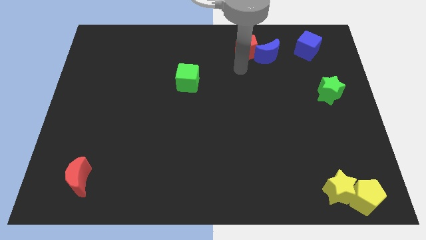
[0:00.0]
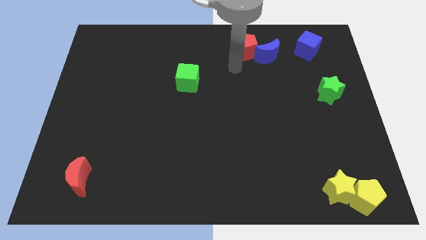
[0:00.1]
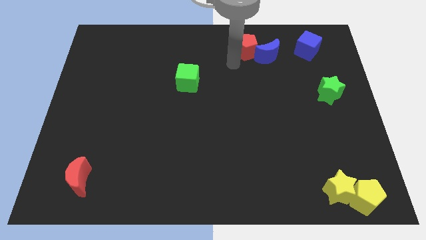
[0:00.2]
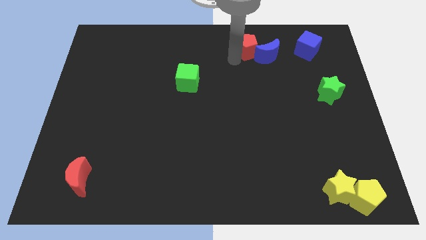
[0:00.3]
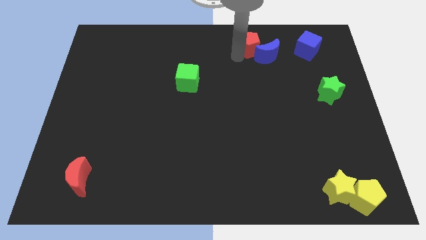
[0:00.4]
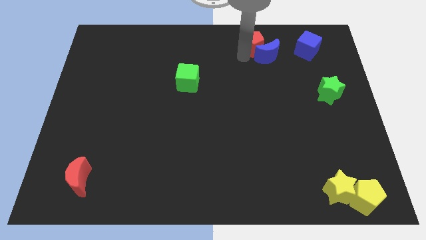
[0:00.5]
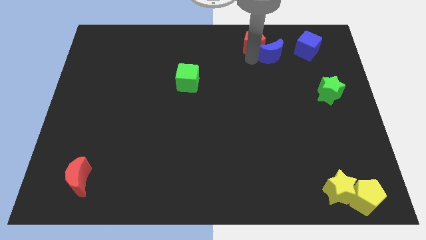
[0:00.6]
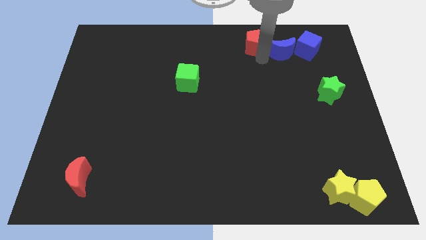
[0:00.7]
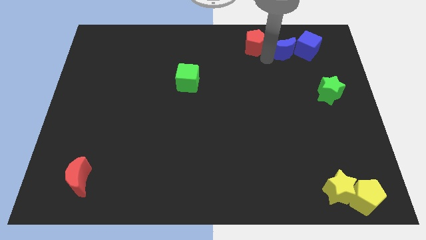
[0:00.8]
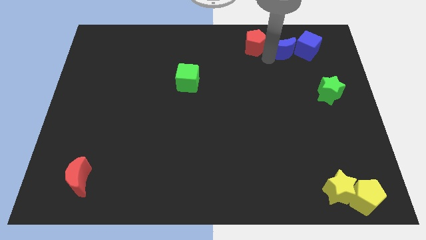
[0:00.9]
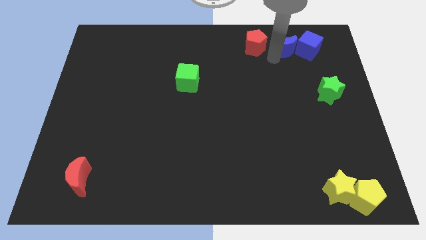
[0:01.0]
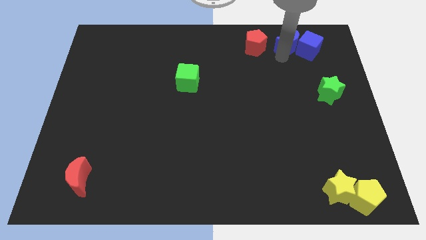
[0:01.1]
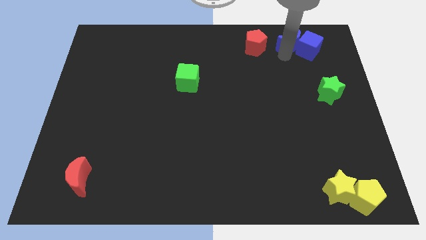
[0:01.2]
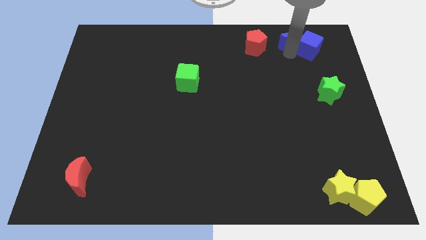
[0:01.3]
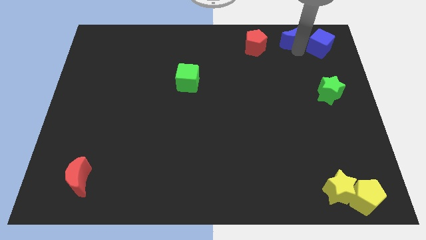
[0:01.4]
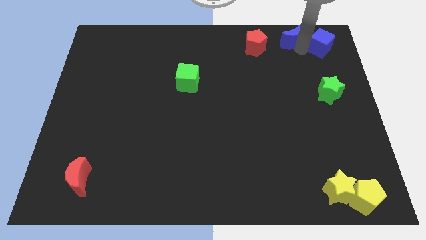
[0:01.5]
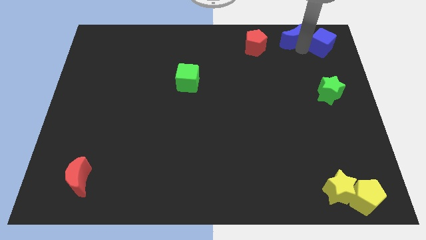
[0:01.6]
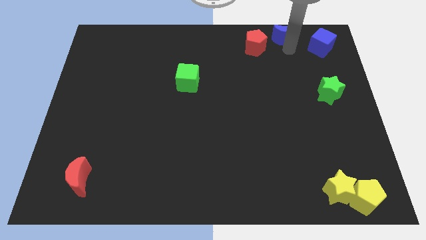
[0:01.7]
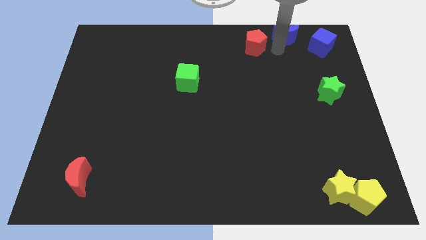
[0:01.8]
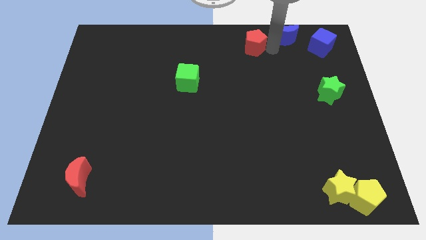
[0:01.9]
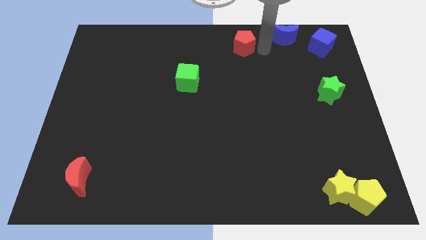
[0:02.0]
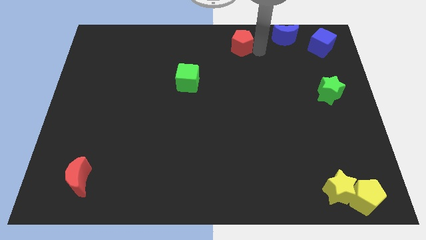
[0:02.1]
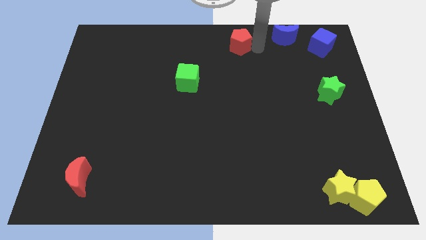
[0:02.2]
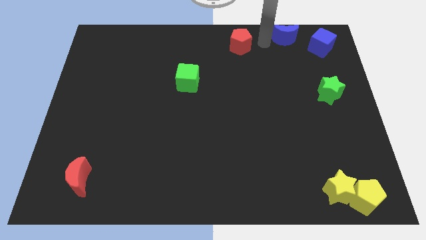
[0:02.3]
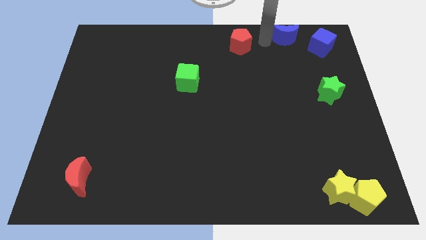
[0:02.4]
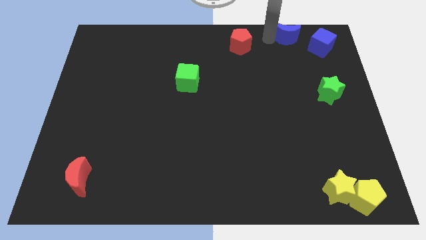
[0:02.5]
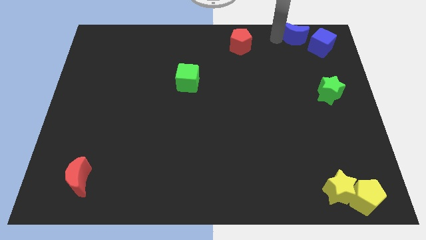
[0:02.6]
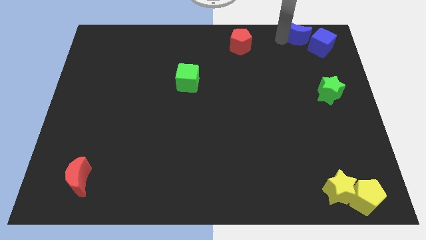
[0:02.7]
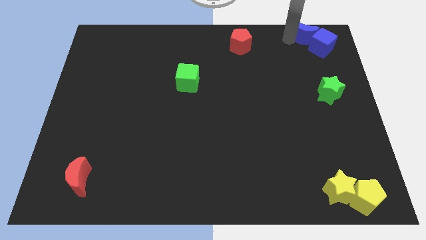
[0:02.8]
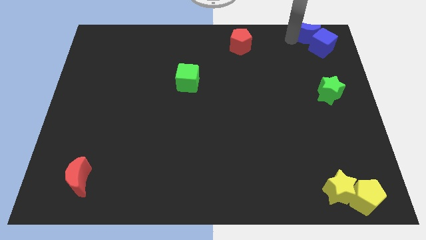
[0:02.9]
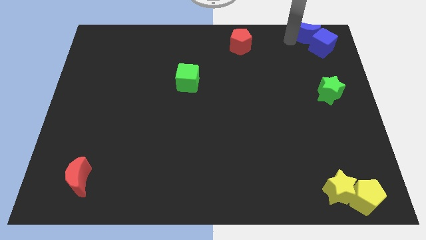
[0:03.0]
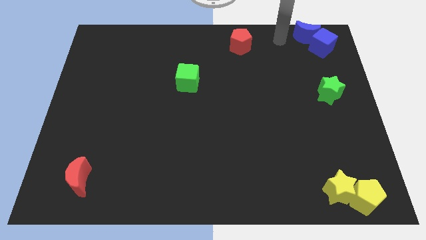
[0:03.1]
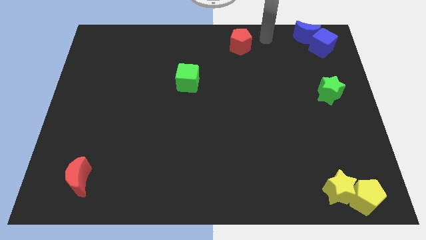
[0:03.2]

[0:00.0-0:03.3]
separate the blue moon from the red pentagon

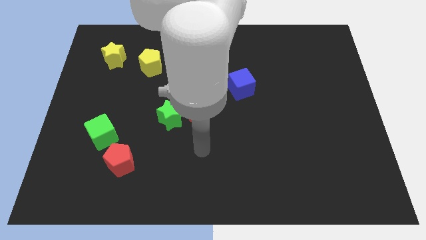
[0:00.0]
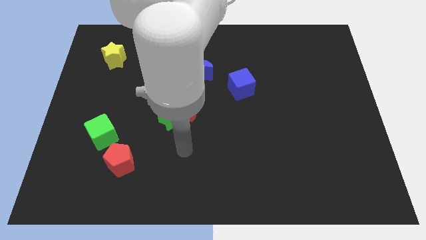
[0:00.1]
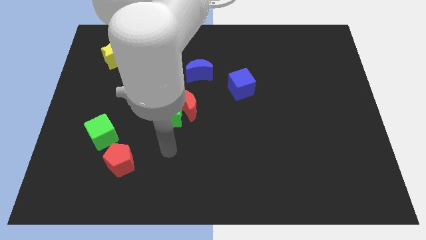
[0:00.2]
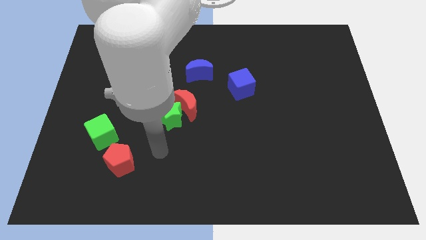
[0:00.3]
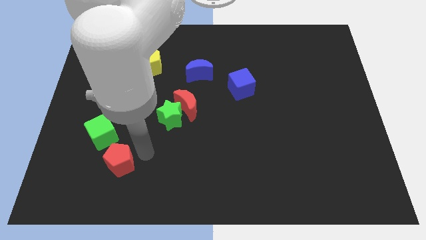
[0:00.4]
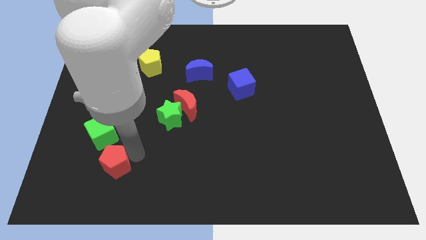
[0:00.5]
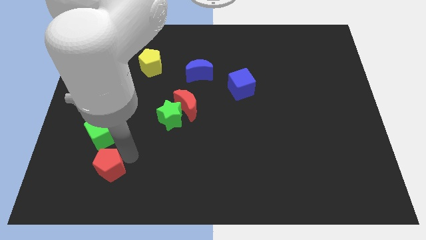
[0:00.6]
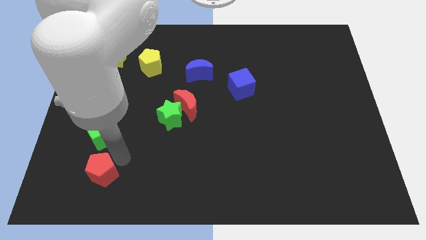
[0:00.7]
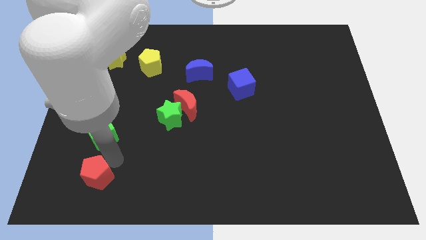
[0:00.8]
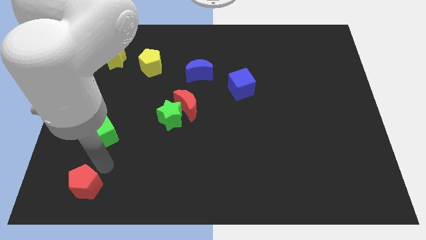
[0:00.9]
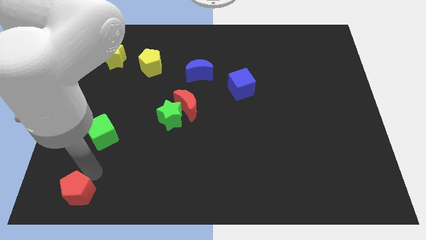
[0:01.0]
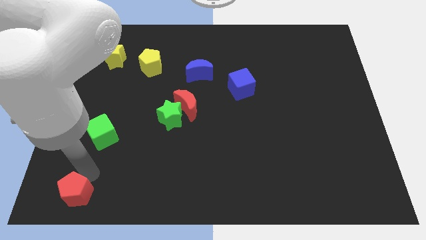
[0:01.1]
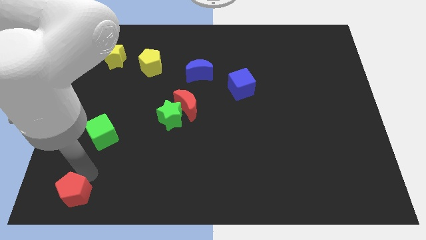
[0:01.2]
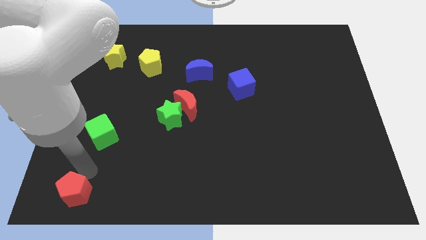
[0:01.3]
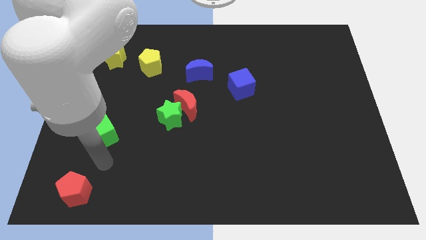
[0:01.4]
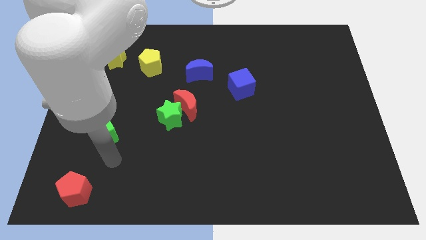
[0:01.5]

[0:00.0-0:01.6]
move the red pentagon to the bottom left of the board

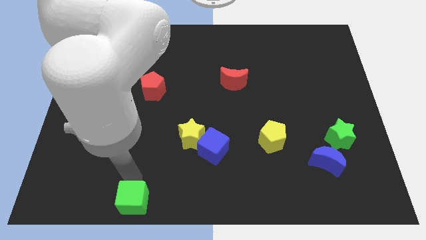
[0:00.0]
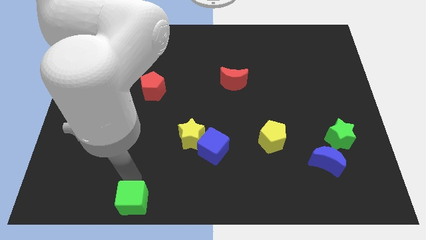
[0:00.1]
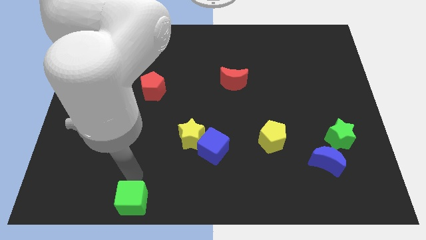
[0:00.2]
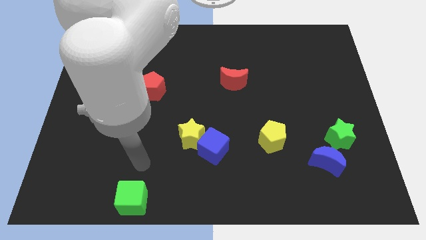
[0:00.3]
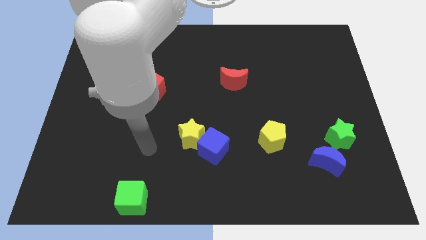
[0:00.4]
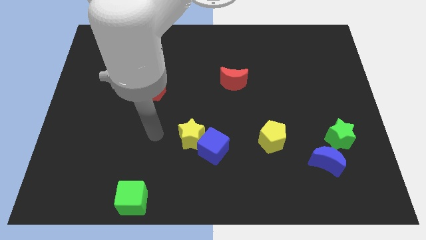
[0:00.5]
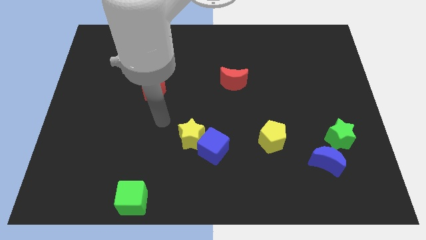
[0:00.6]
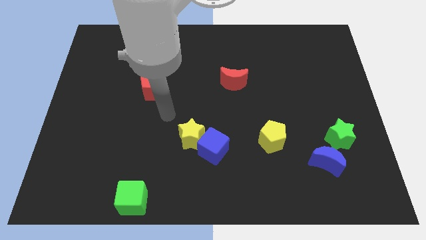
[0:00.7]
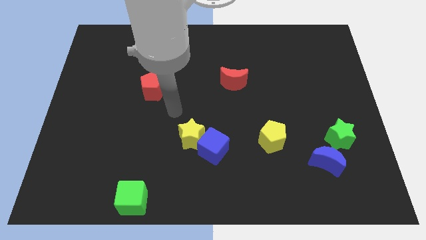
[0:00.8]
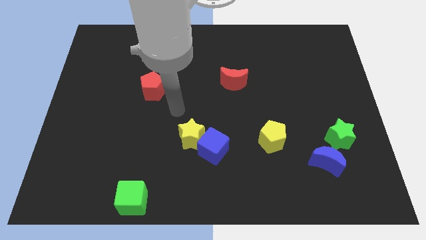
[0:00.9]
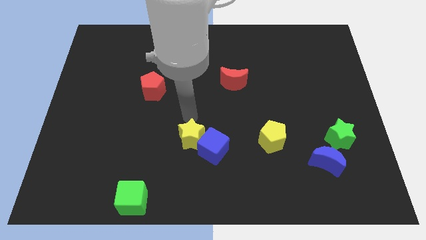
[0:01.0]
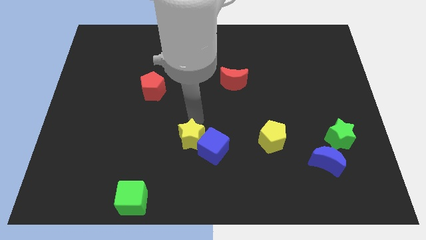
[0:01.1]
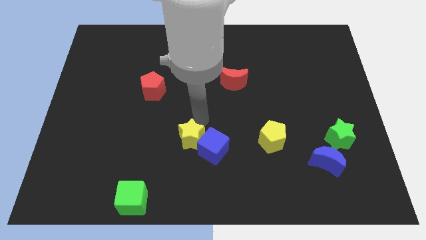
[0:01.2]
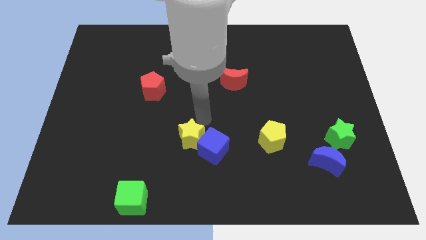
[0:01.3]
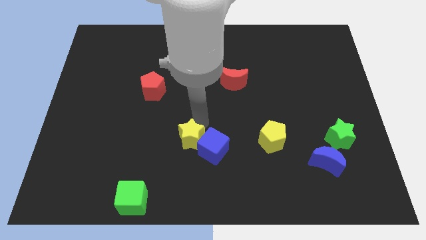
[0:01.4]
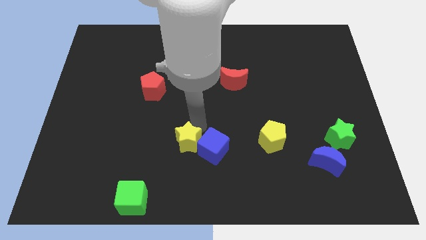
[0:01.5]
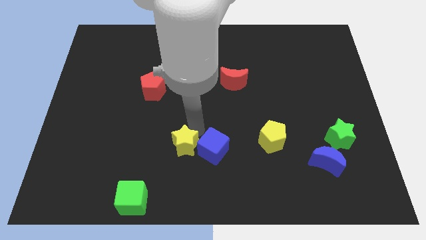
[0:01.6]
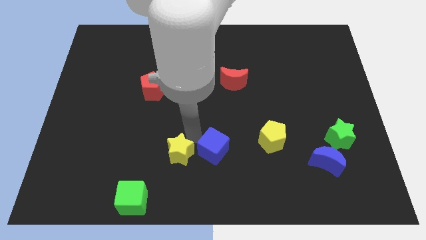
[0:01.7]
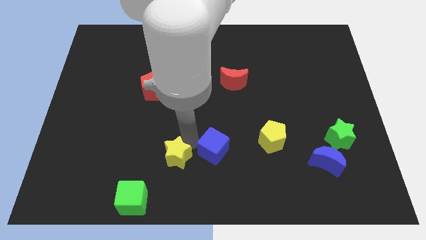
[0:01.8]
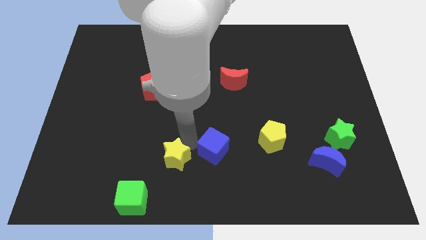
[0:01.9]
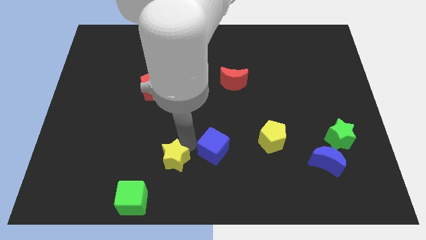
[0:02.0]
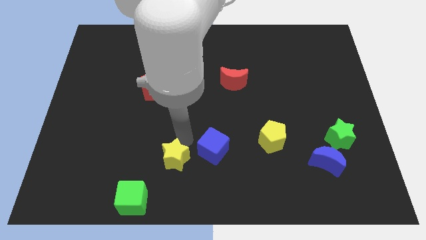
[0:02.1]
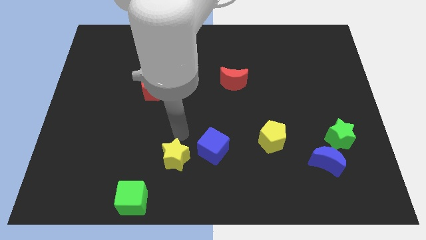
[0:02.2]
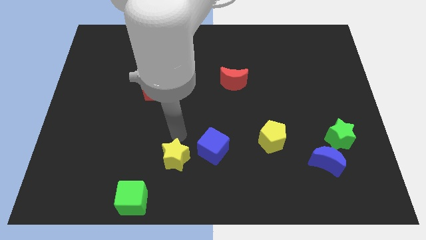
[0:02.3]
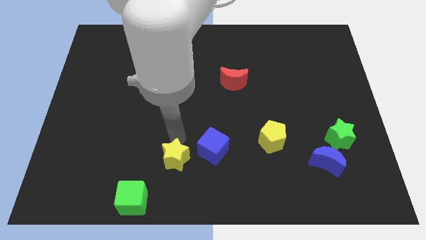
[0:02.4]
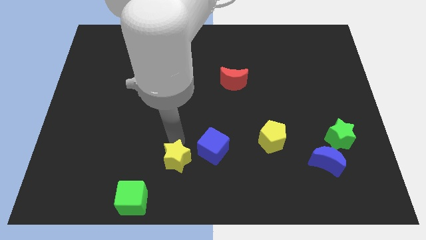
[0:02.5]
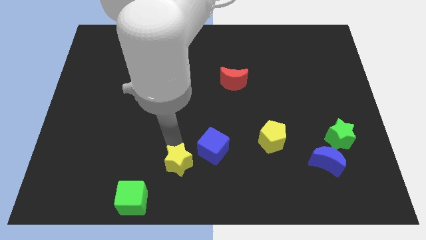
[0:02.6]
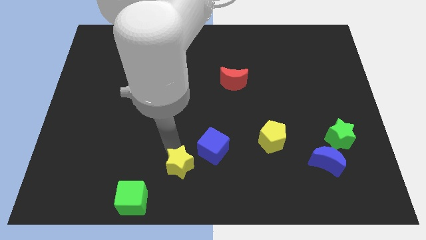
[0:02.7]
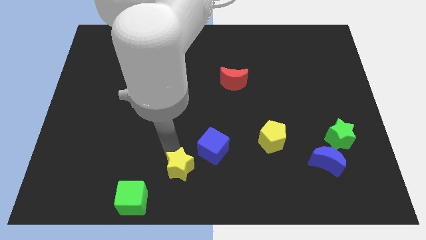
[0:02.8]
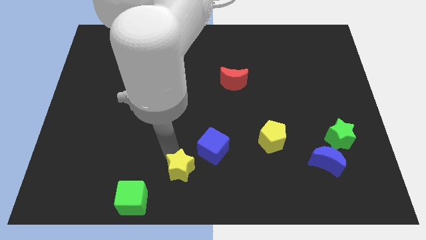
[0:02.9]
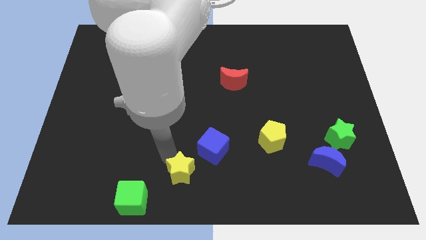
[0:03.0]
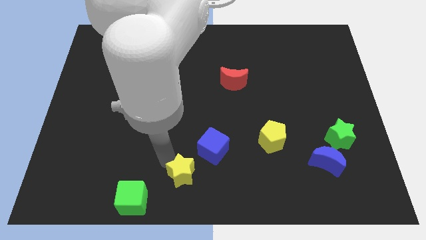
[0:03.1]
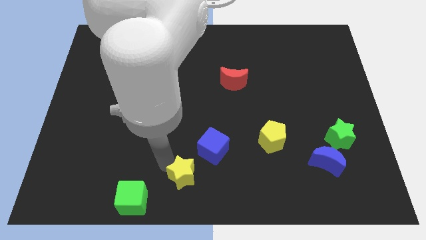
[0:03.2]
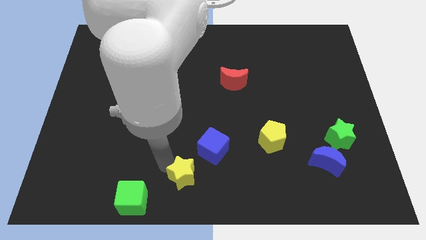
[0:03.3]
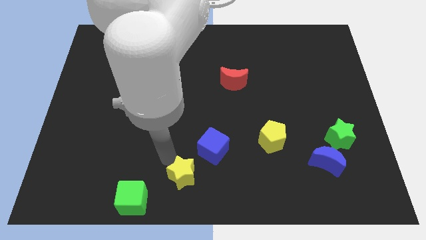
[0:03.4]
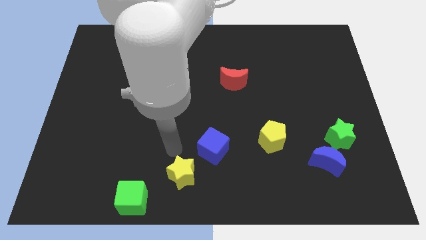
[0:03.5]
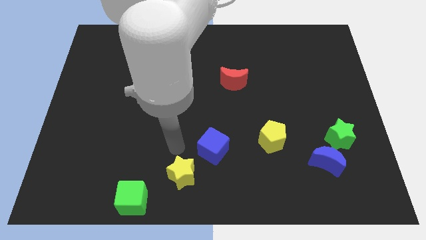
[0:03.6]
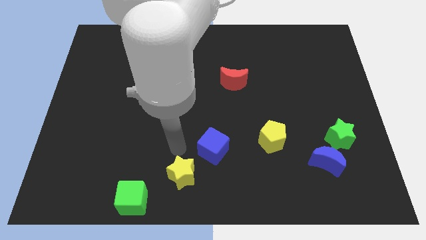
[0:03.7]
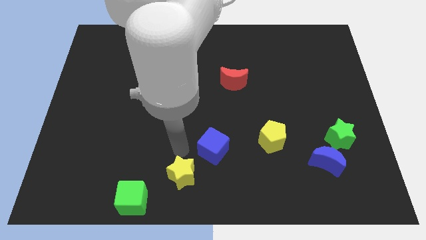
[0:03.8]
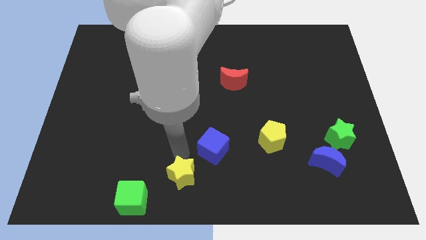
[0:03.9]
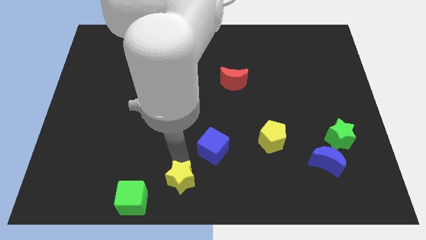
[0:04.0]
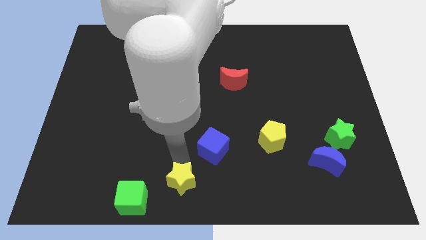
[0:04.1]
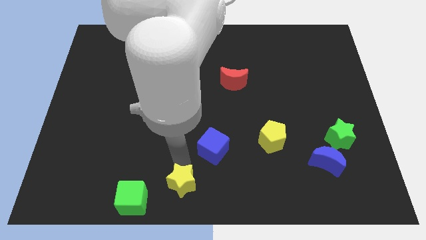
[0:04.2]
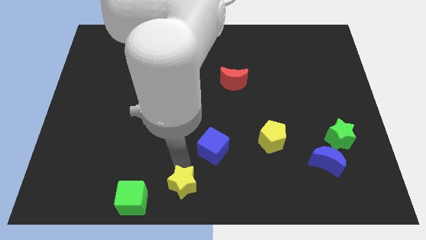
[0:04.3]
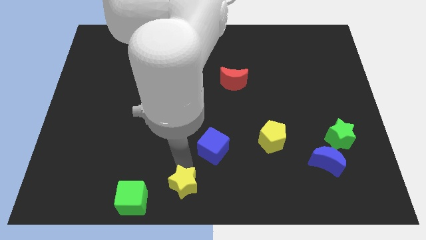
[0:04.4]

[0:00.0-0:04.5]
place the yellow pentagon in between the blue cube and green cube
